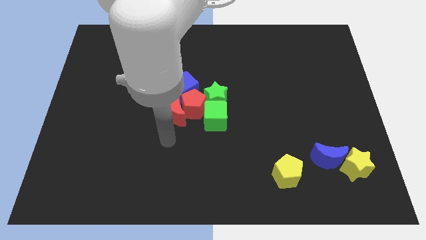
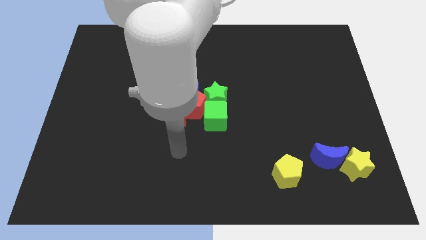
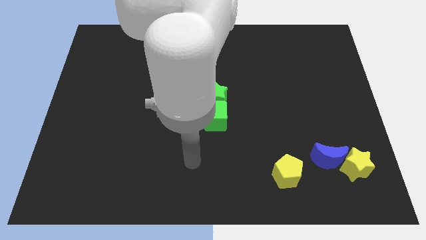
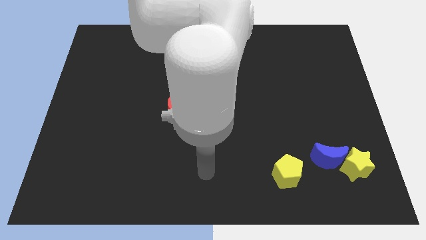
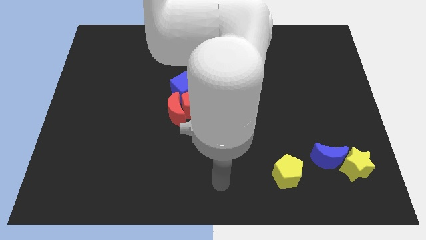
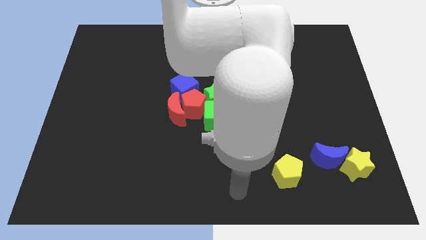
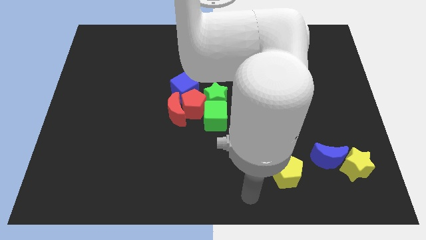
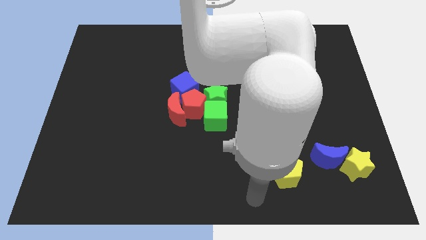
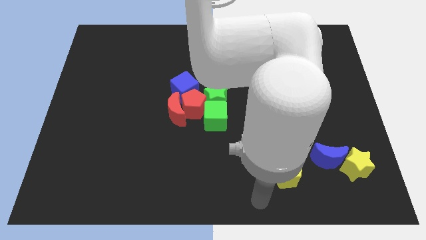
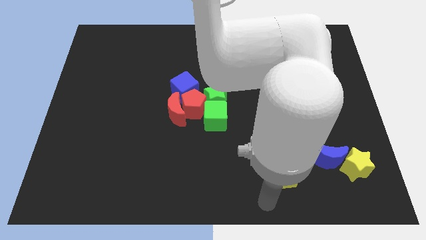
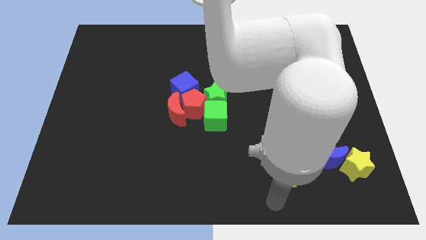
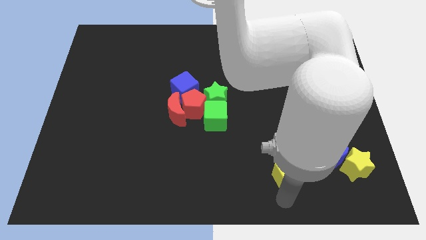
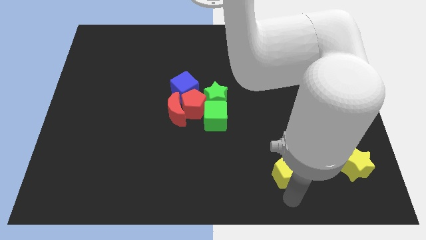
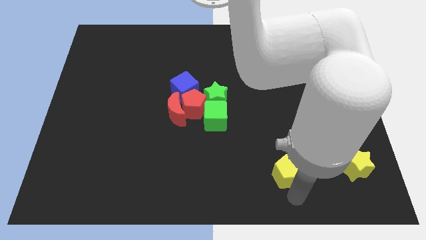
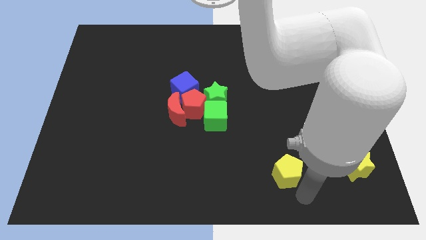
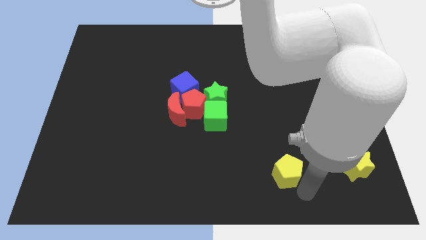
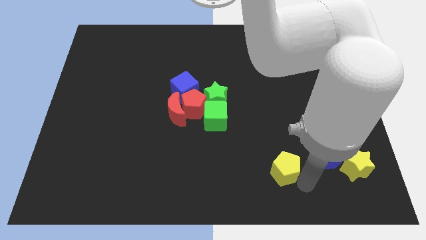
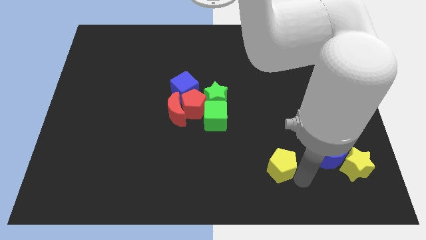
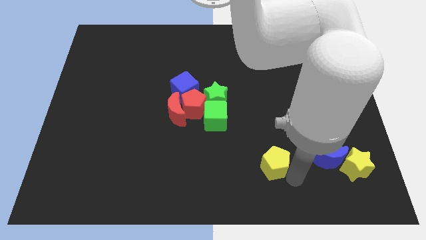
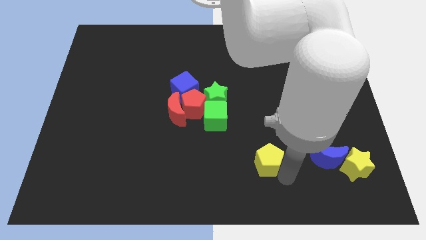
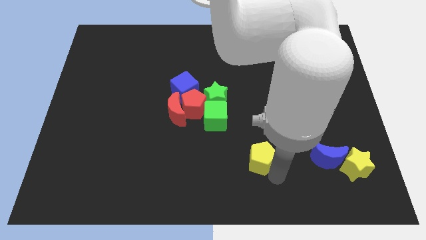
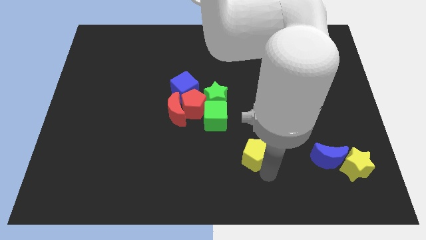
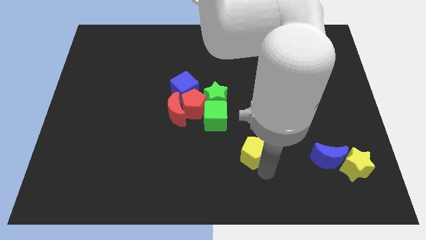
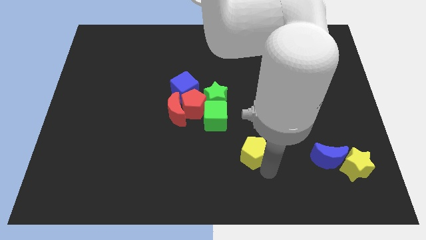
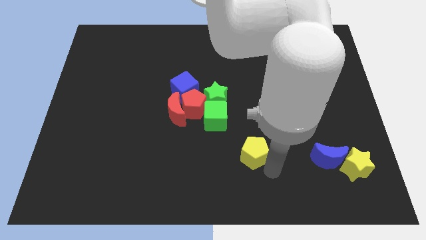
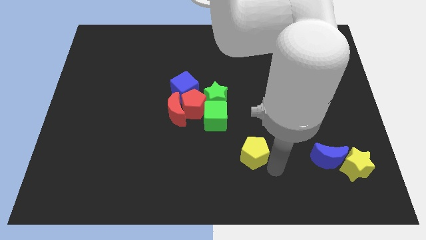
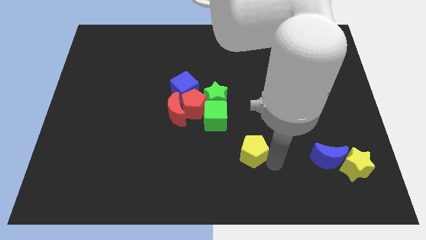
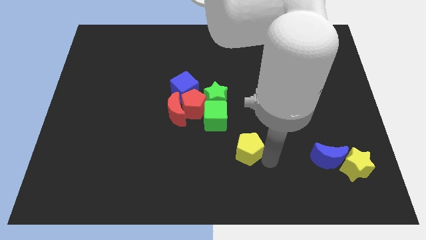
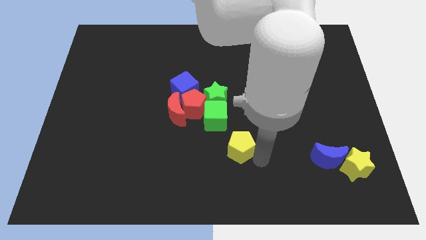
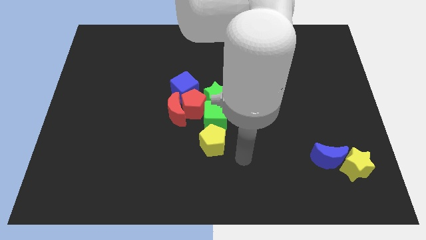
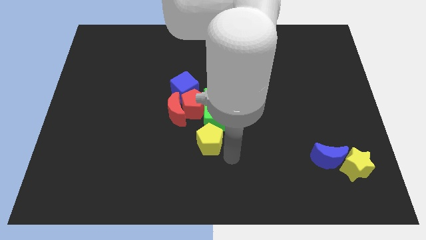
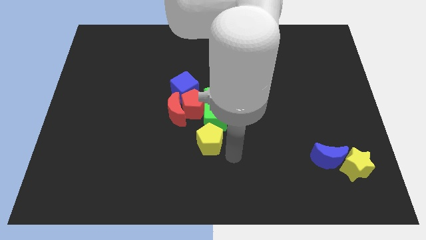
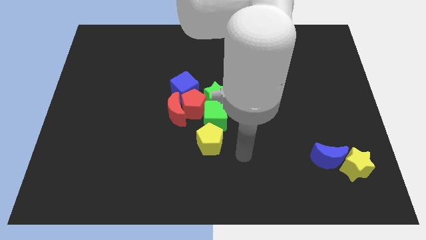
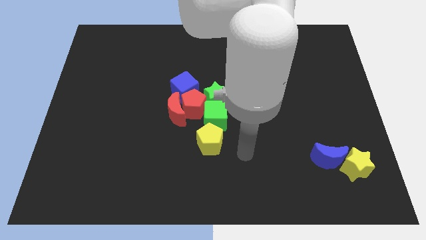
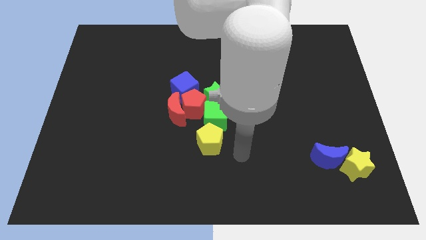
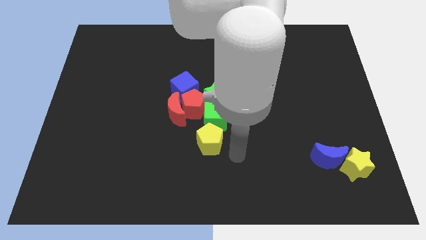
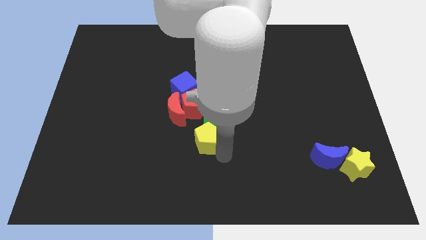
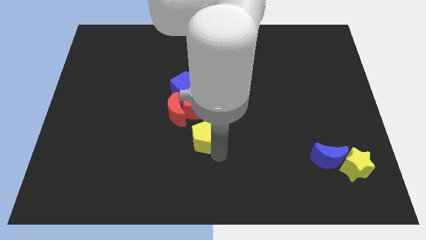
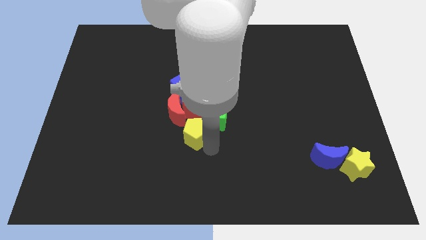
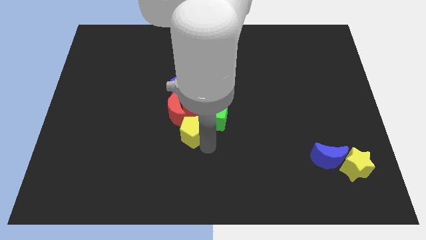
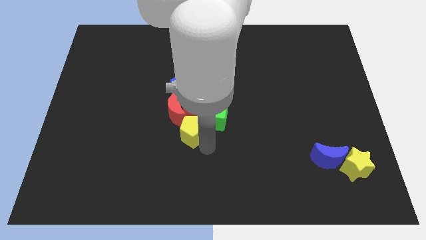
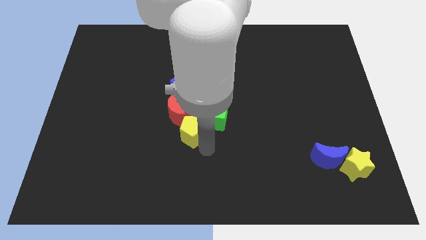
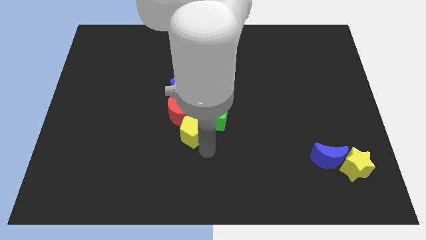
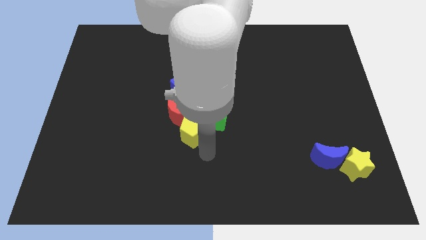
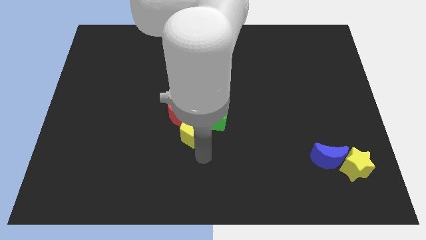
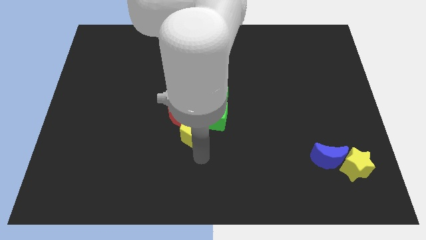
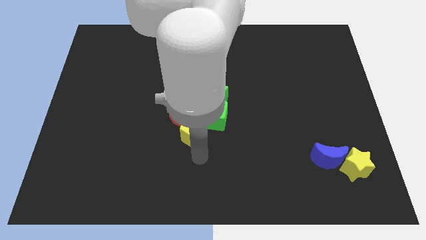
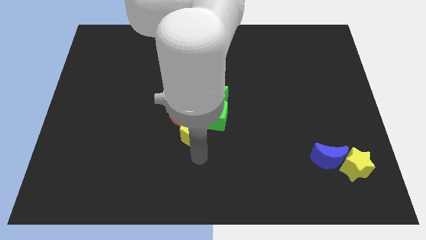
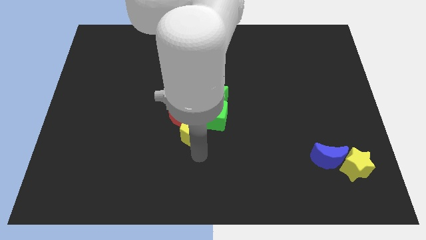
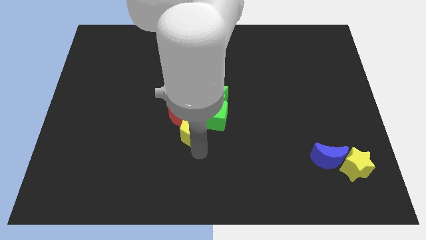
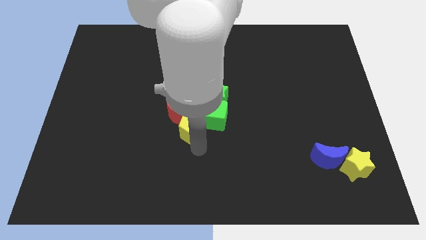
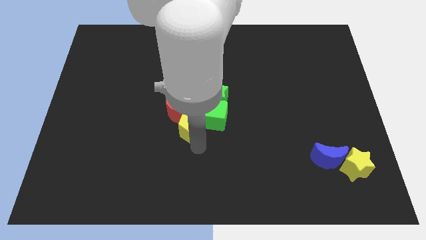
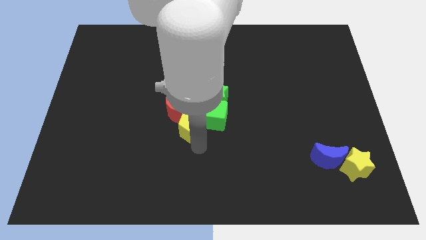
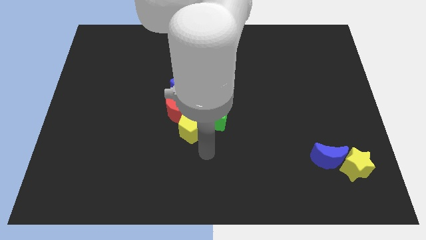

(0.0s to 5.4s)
push the yellow pentagon into the red crescent

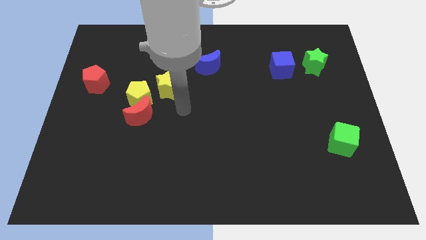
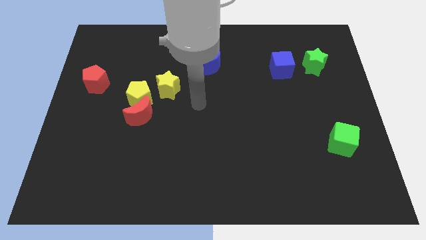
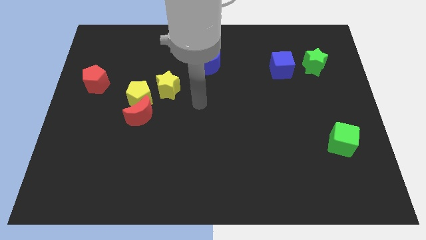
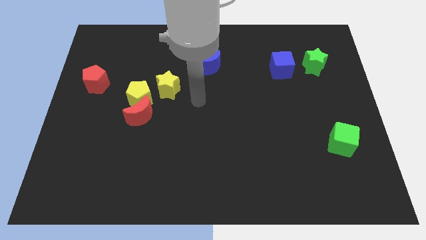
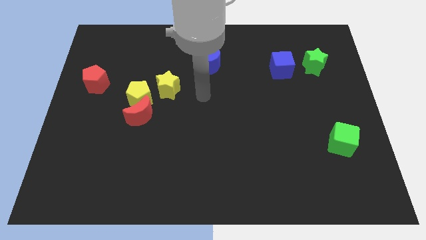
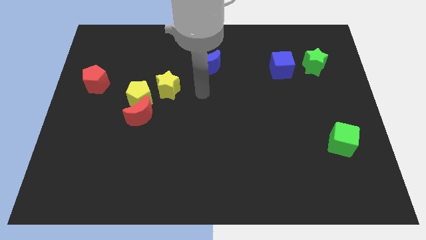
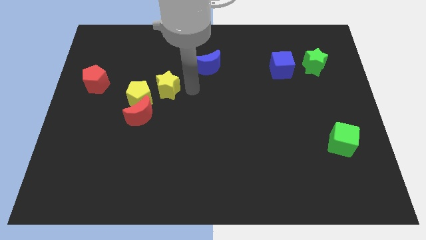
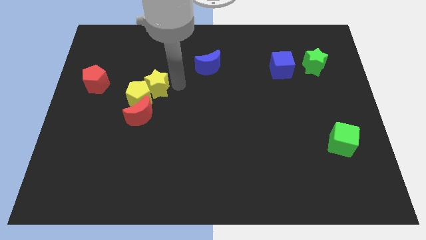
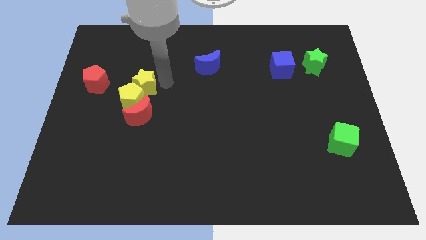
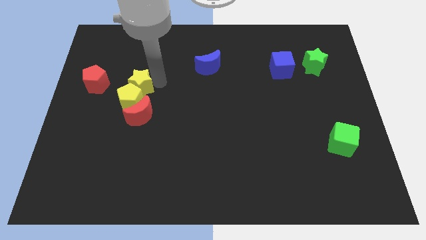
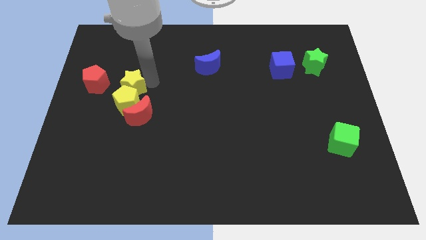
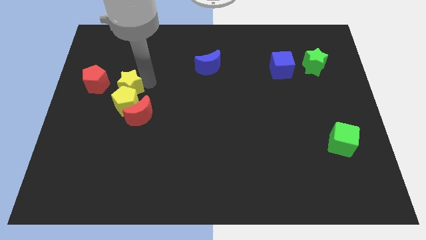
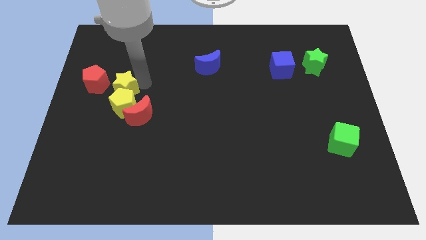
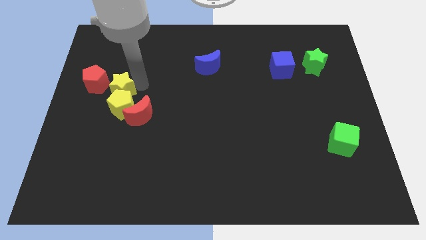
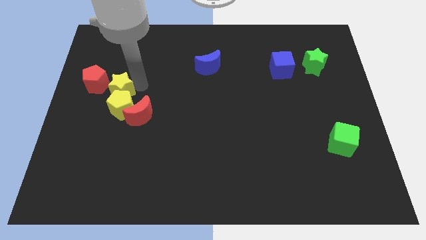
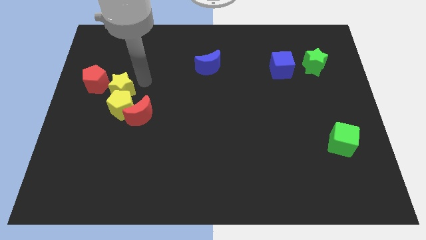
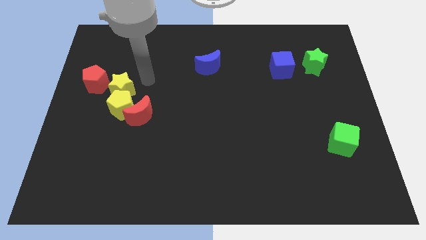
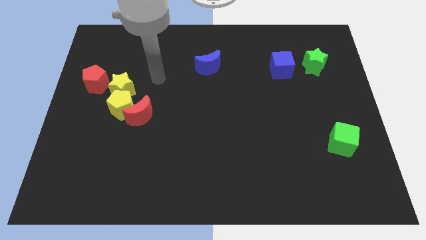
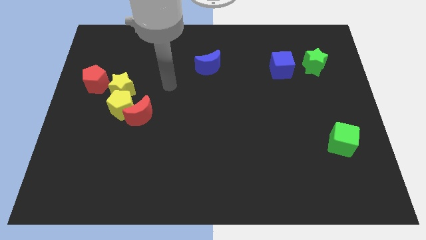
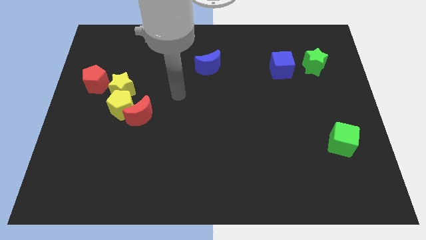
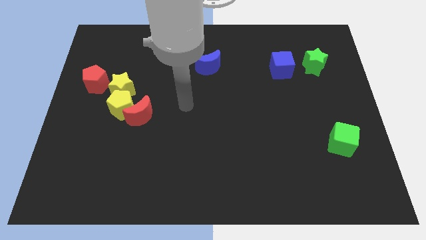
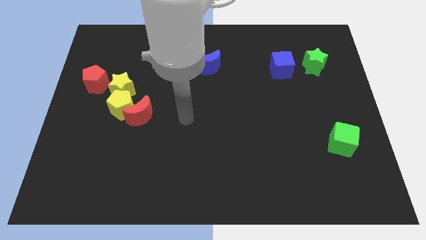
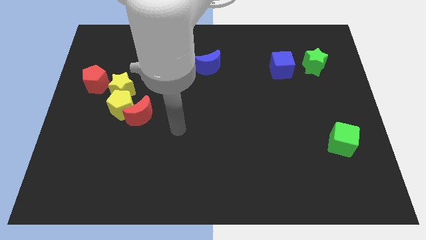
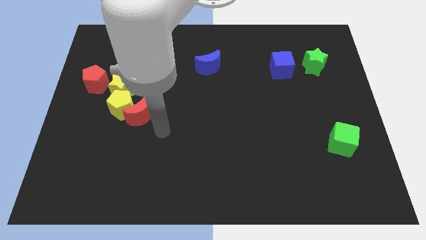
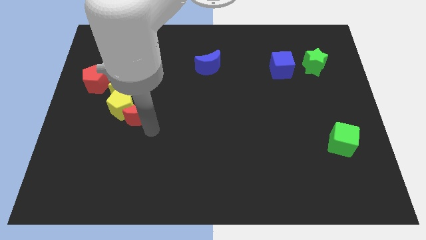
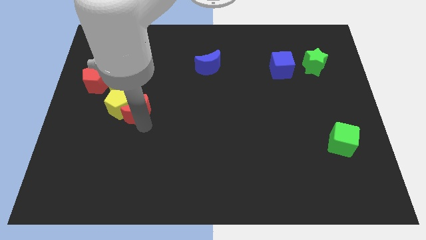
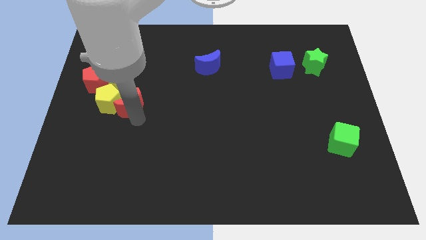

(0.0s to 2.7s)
push the yellow star into the yellow pentagon

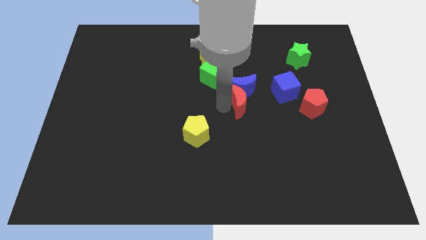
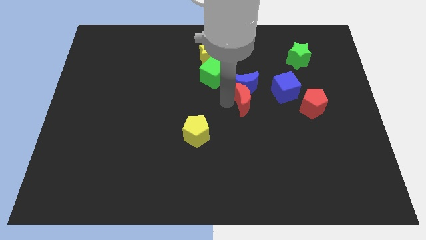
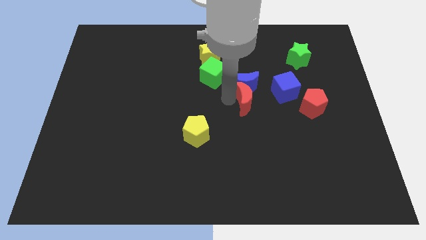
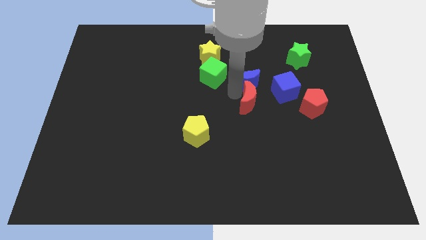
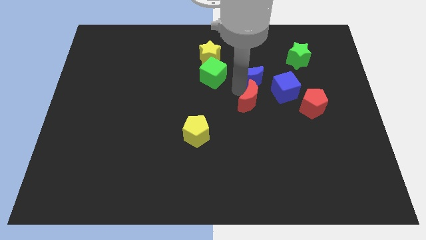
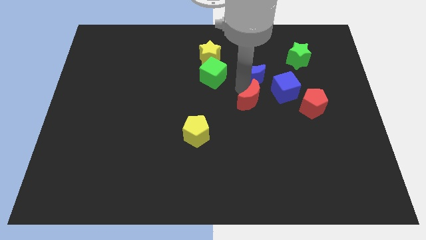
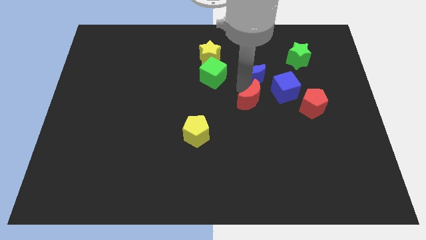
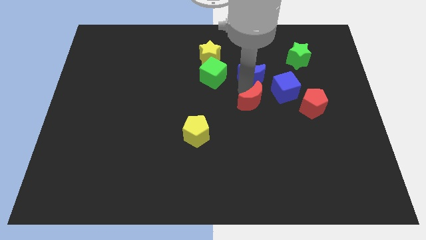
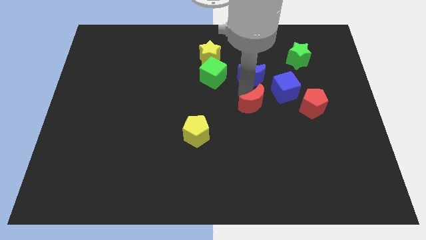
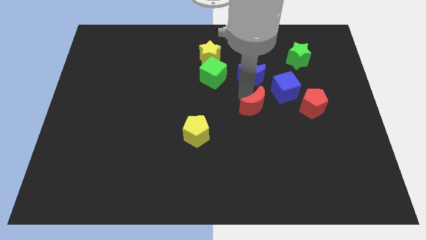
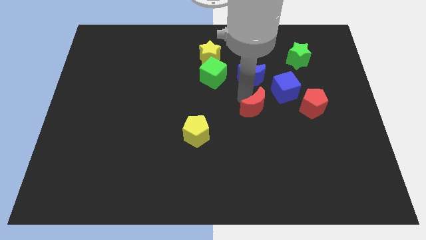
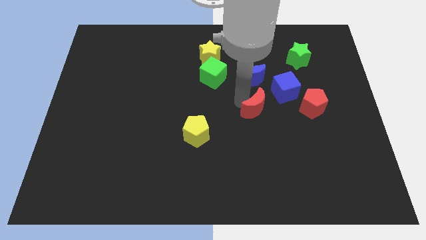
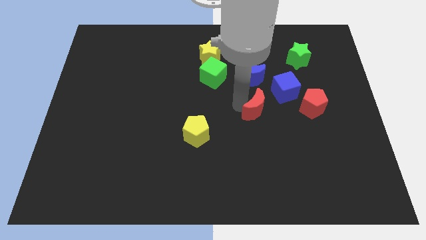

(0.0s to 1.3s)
separate the red moon from blue moon
